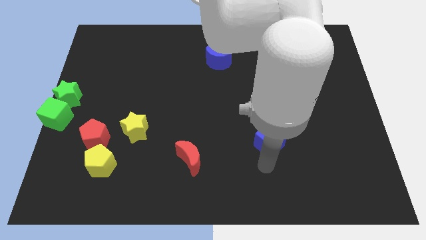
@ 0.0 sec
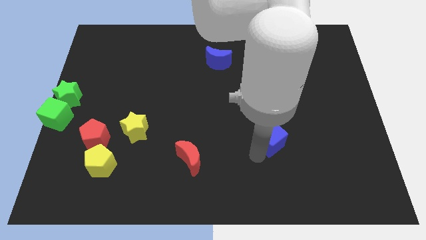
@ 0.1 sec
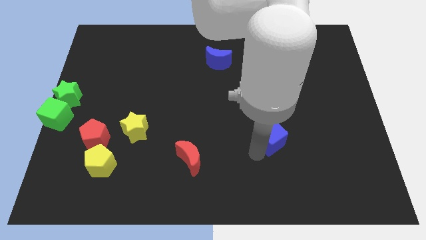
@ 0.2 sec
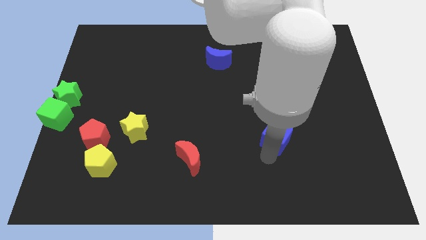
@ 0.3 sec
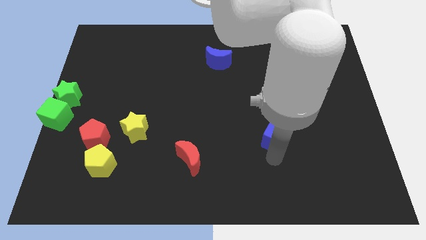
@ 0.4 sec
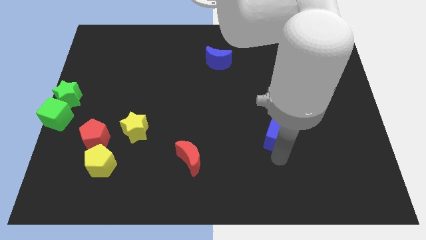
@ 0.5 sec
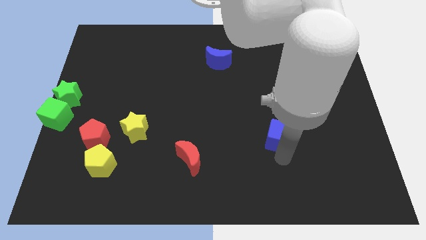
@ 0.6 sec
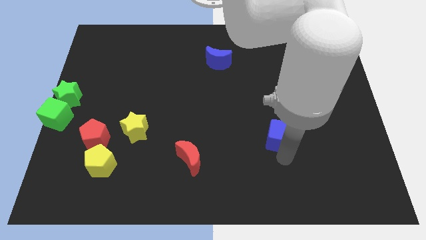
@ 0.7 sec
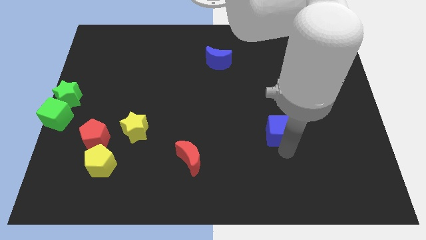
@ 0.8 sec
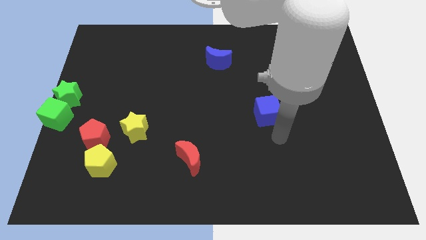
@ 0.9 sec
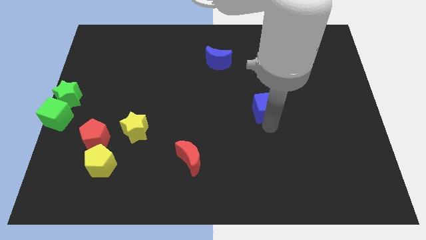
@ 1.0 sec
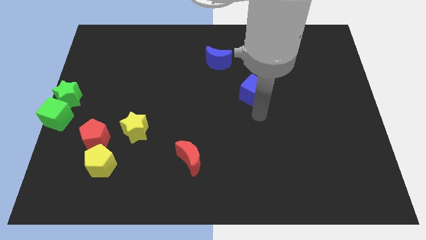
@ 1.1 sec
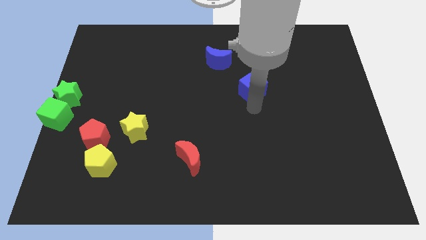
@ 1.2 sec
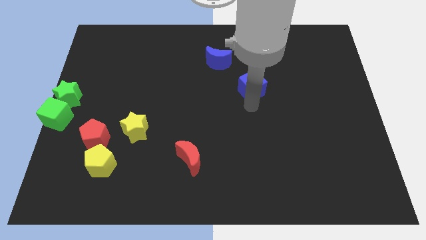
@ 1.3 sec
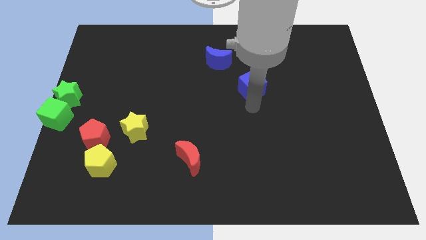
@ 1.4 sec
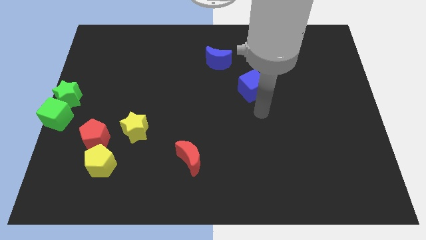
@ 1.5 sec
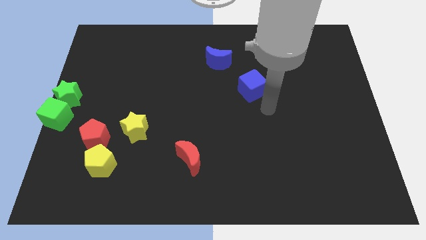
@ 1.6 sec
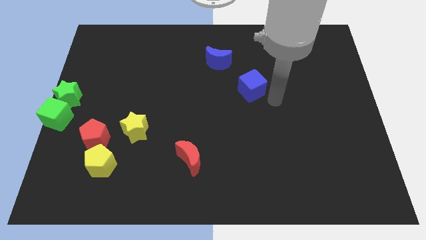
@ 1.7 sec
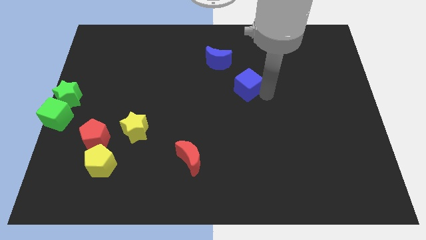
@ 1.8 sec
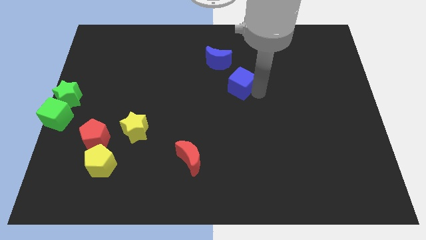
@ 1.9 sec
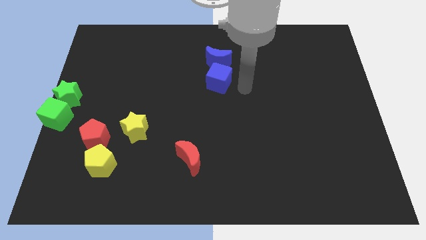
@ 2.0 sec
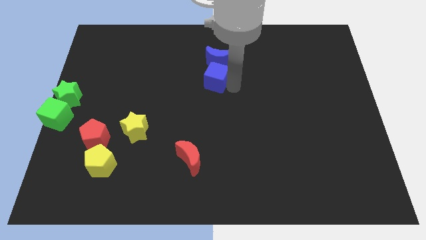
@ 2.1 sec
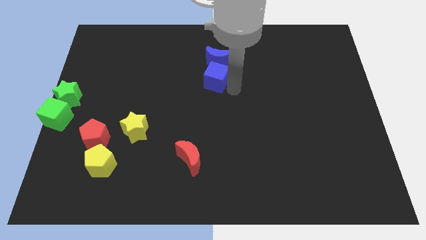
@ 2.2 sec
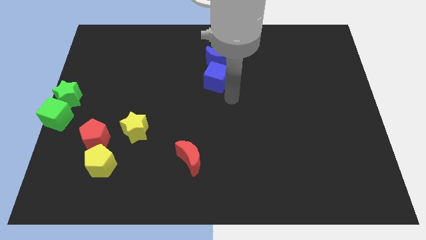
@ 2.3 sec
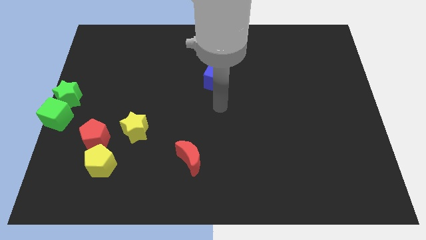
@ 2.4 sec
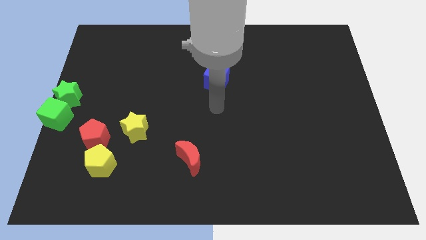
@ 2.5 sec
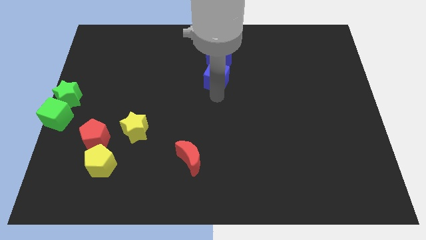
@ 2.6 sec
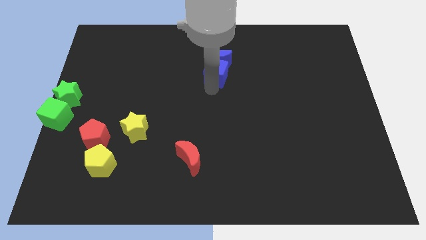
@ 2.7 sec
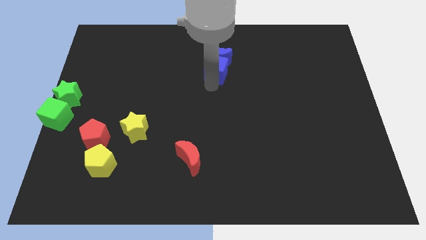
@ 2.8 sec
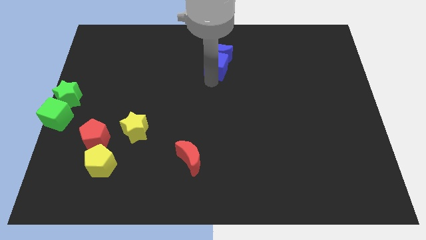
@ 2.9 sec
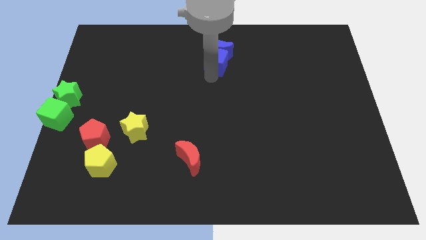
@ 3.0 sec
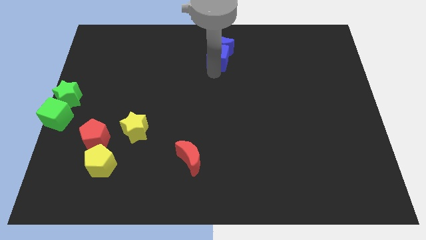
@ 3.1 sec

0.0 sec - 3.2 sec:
place the blue cube vertically below the blue mooon

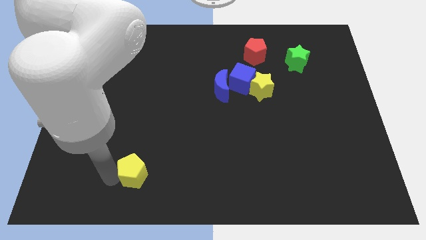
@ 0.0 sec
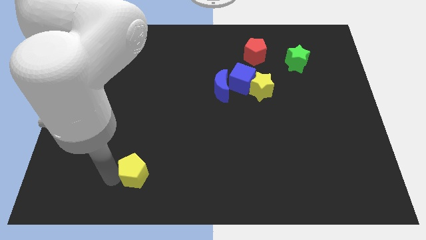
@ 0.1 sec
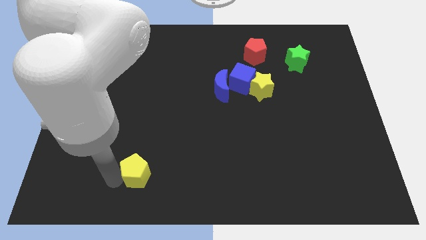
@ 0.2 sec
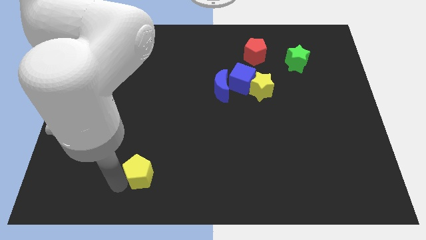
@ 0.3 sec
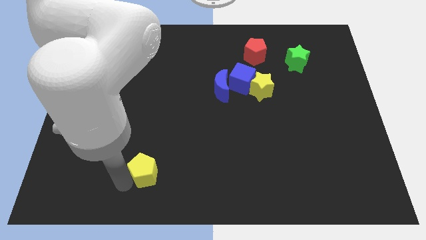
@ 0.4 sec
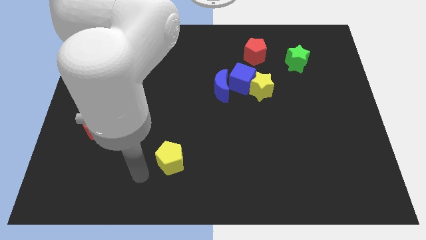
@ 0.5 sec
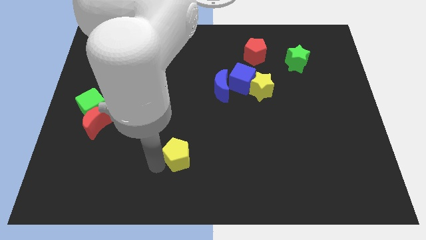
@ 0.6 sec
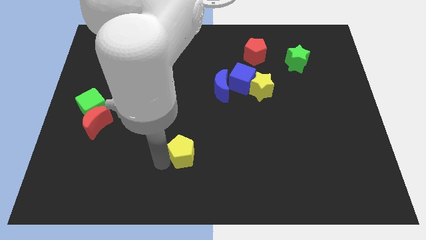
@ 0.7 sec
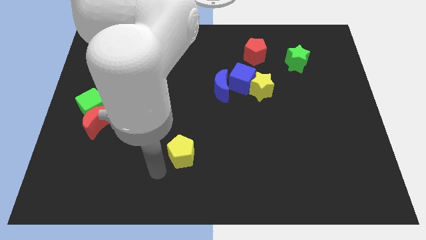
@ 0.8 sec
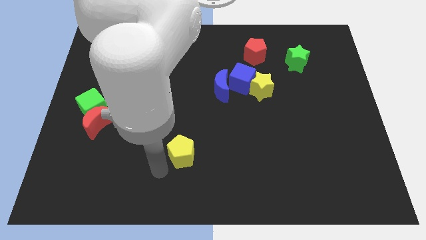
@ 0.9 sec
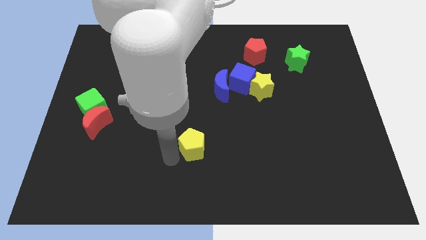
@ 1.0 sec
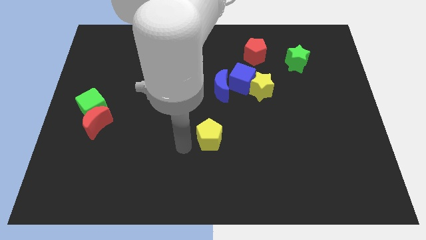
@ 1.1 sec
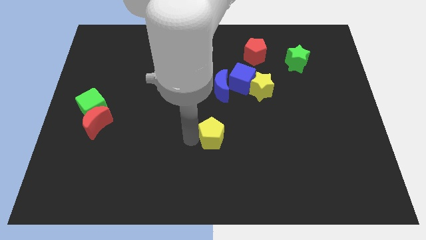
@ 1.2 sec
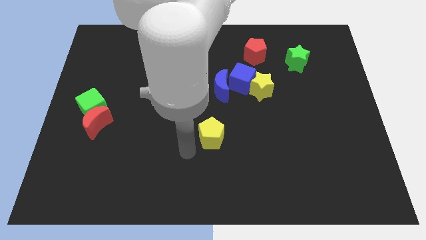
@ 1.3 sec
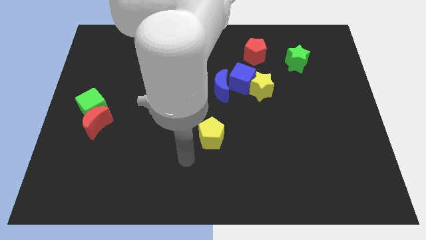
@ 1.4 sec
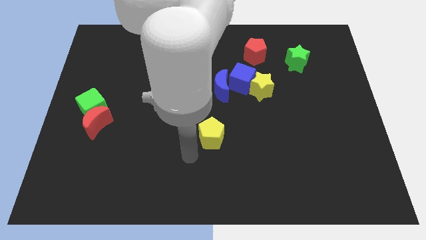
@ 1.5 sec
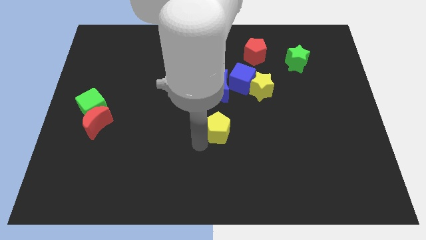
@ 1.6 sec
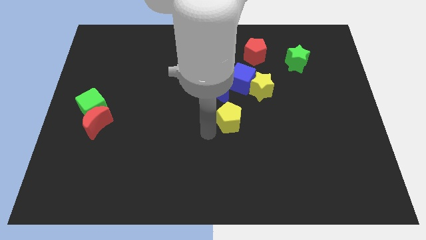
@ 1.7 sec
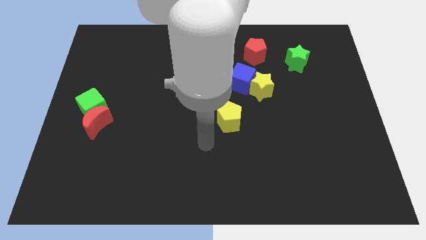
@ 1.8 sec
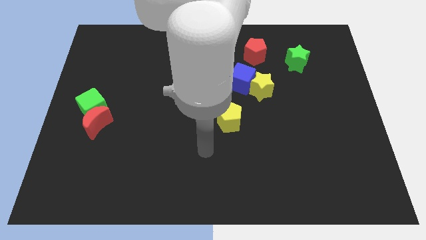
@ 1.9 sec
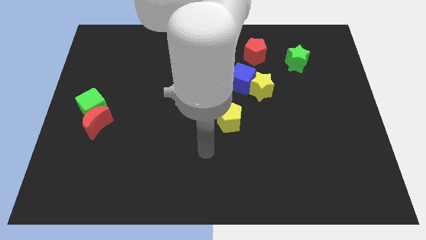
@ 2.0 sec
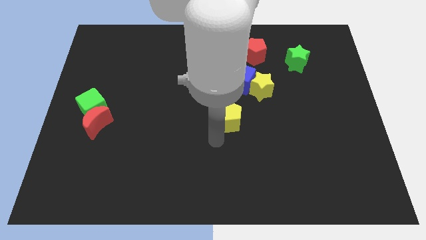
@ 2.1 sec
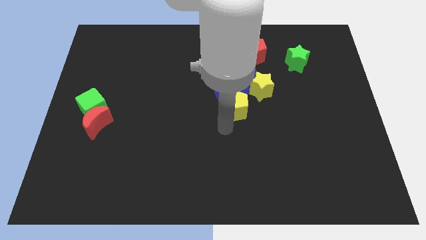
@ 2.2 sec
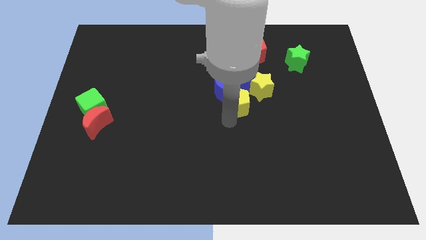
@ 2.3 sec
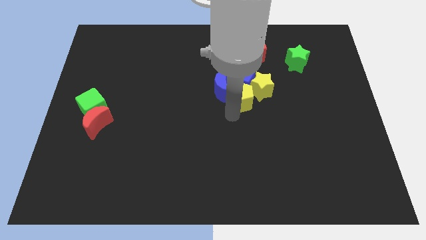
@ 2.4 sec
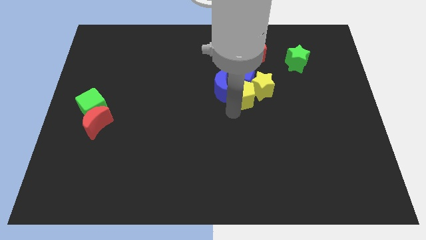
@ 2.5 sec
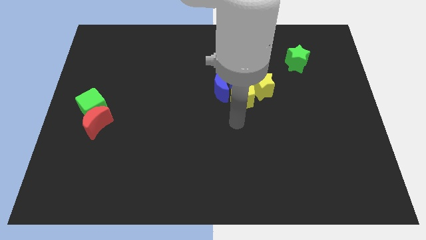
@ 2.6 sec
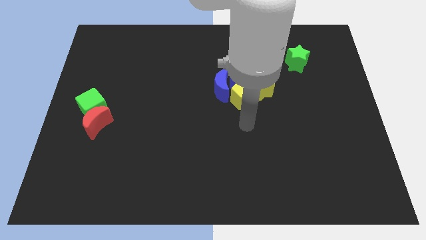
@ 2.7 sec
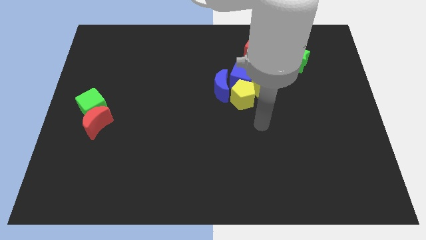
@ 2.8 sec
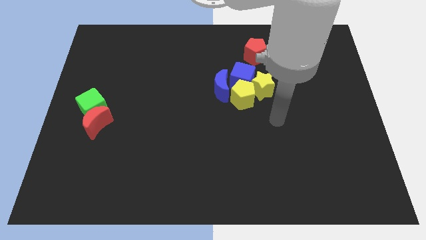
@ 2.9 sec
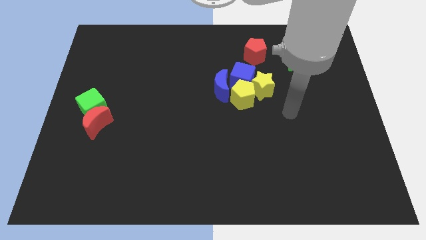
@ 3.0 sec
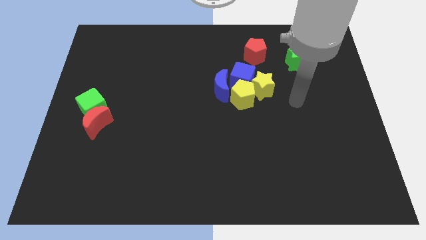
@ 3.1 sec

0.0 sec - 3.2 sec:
place the yellow pentagon towards the bottom of the blue cube

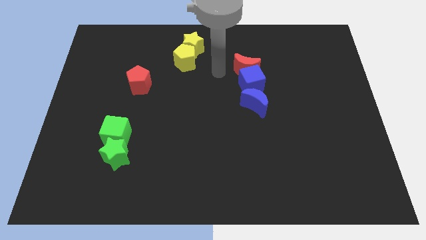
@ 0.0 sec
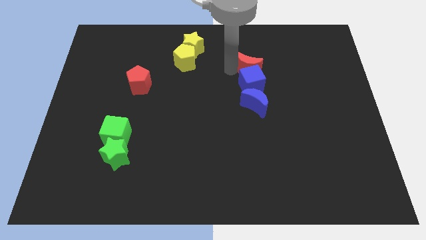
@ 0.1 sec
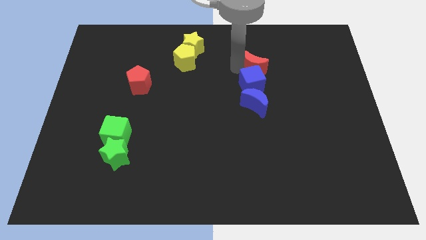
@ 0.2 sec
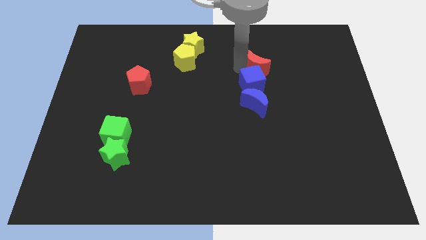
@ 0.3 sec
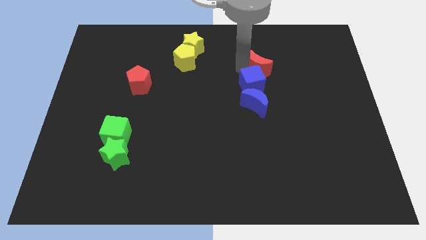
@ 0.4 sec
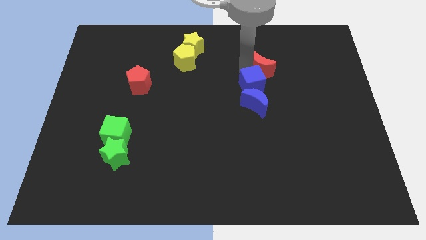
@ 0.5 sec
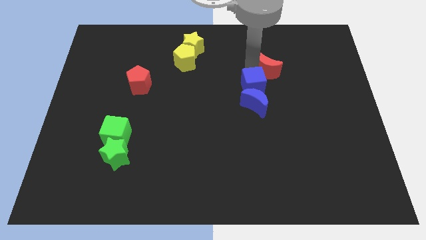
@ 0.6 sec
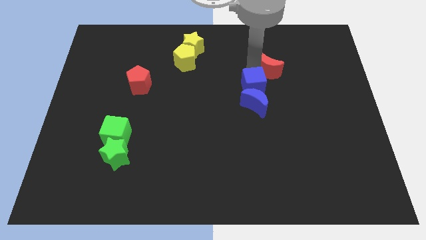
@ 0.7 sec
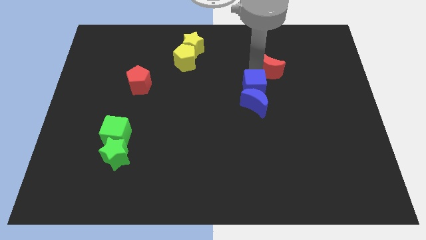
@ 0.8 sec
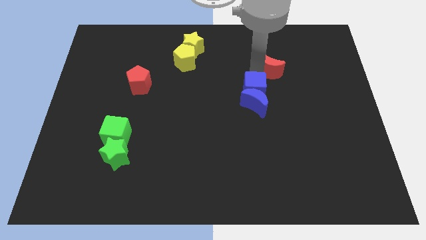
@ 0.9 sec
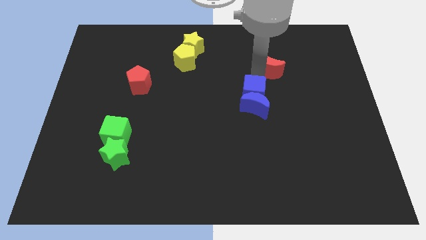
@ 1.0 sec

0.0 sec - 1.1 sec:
put your arm in between the red moon and blue cube

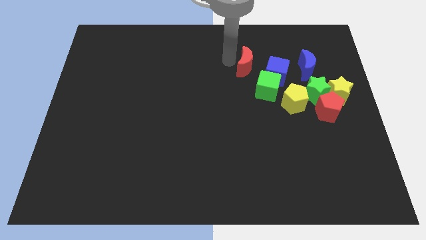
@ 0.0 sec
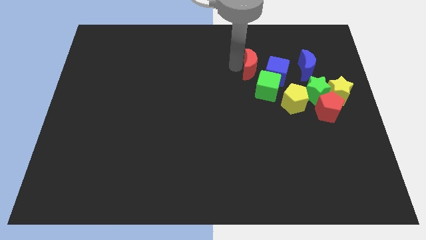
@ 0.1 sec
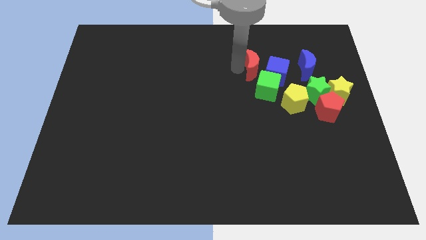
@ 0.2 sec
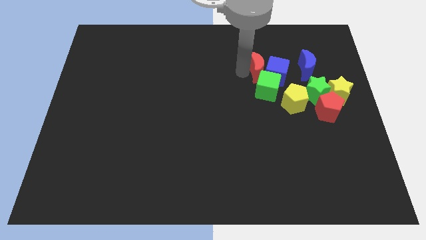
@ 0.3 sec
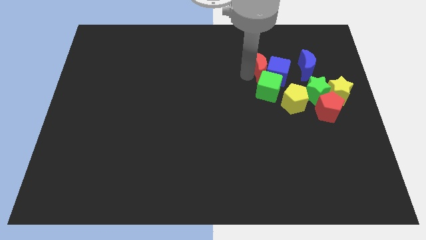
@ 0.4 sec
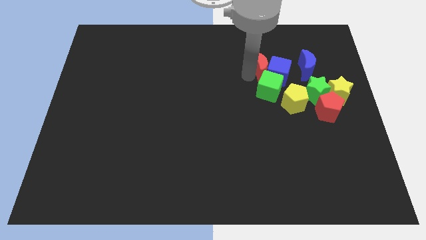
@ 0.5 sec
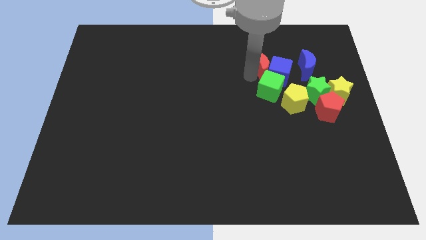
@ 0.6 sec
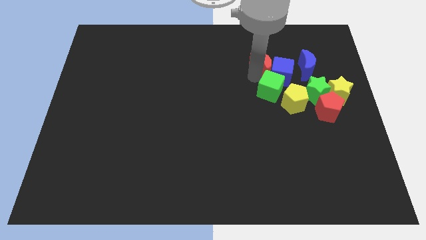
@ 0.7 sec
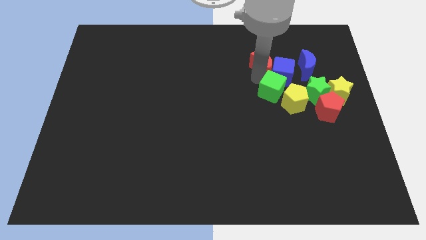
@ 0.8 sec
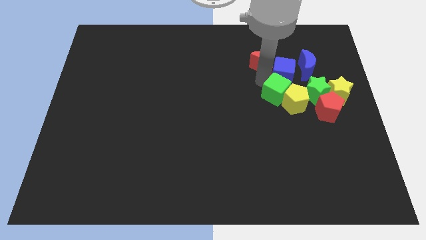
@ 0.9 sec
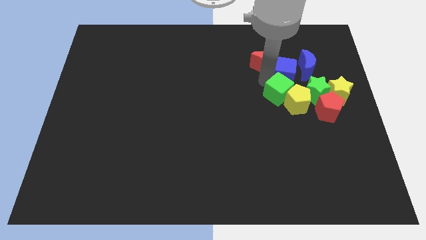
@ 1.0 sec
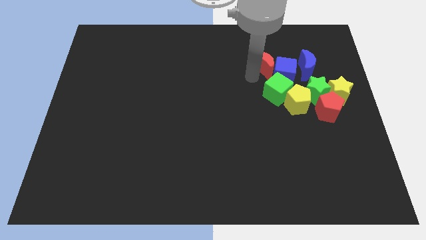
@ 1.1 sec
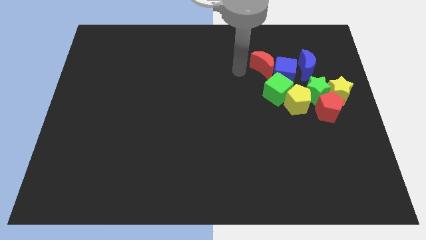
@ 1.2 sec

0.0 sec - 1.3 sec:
move the red crescent into the blue cube
